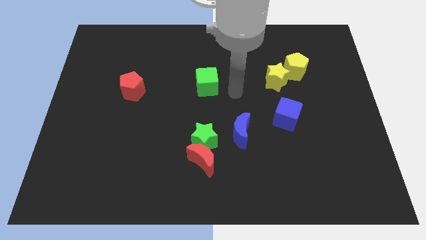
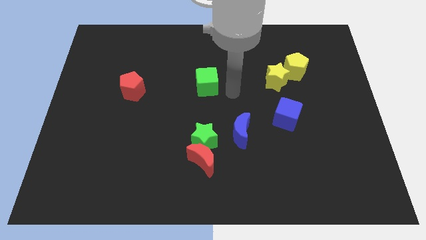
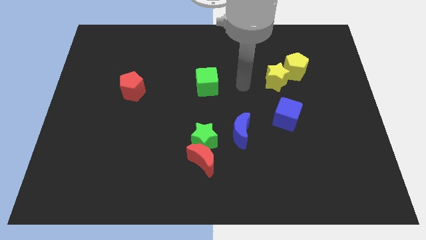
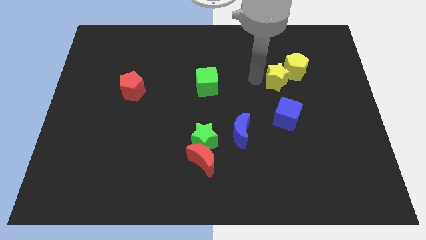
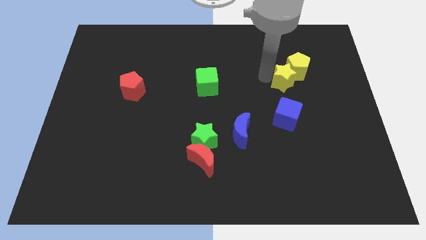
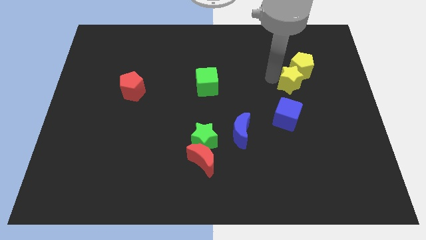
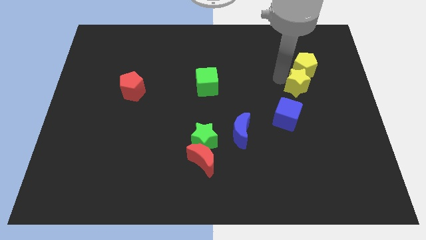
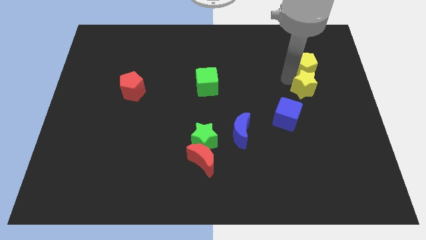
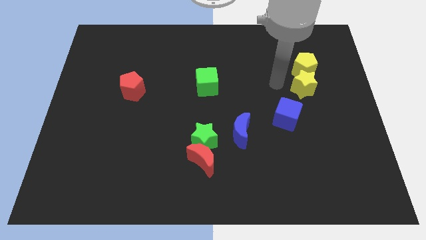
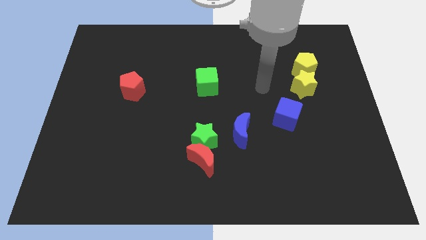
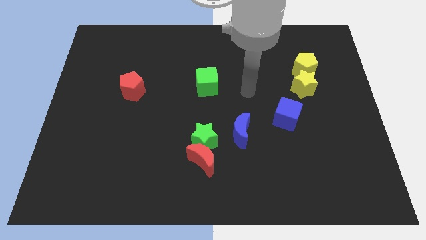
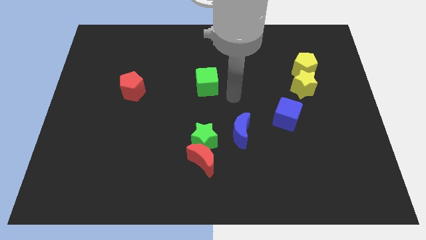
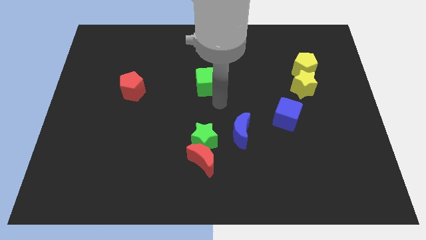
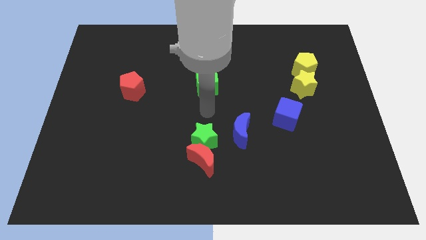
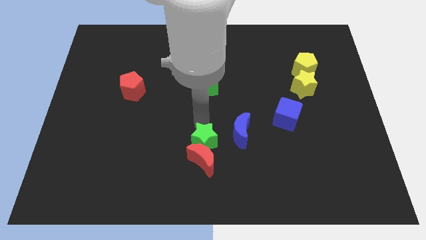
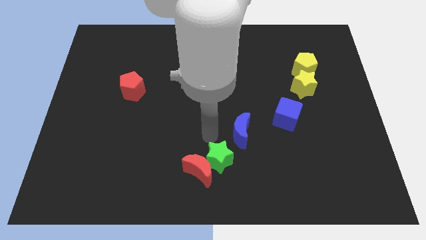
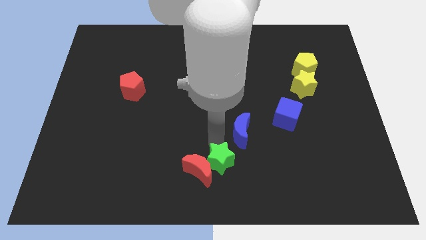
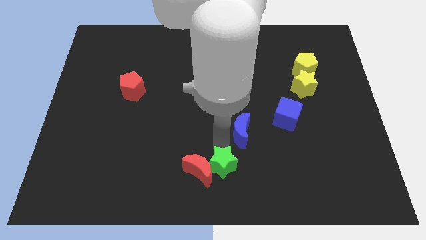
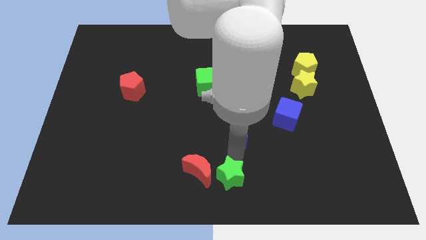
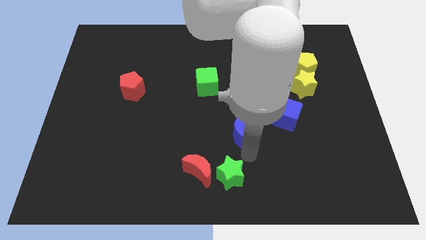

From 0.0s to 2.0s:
move the green star towards the bottom center of the board

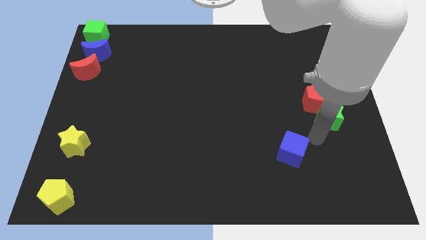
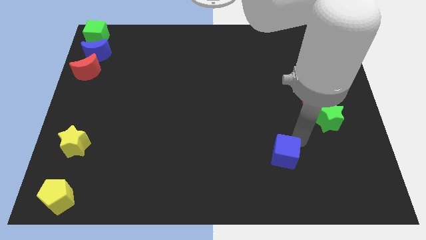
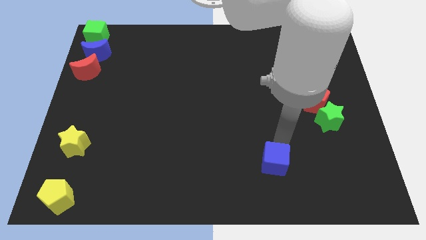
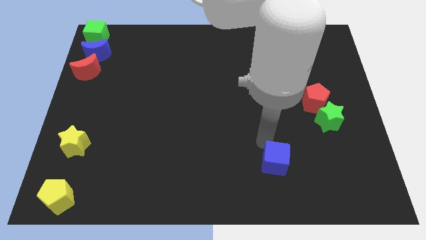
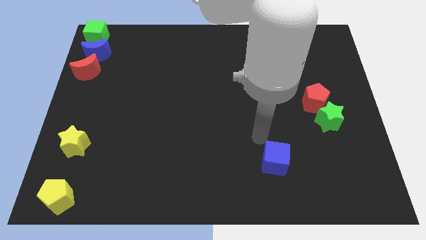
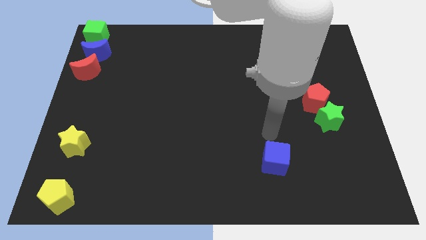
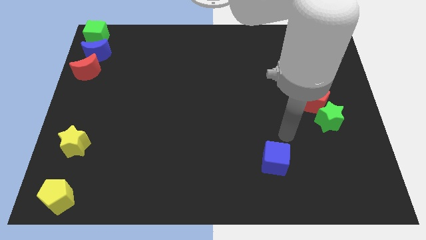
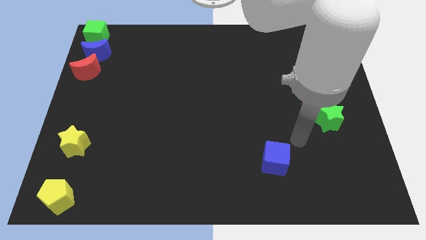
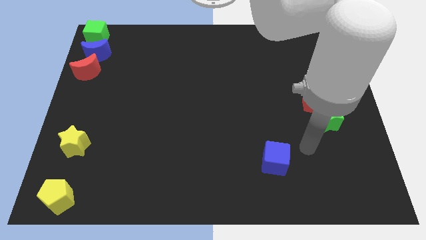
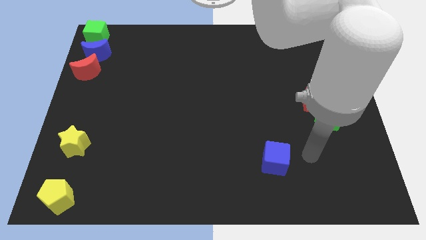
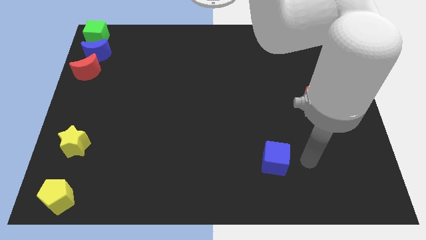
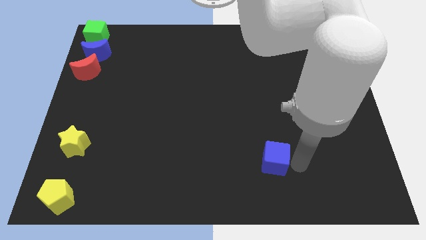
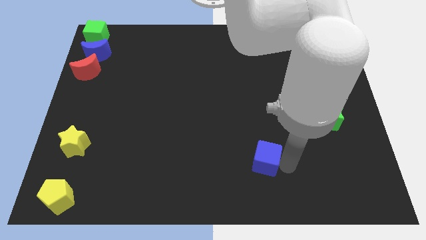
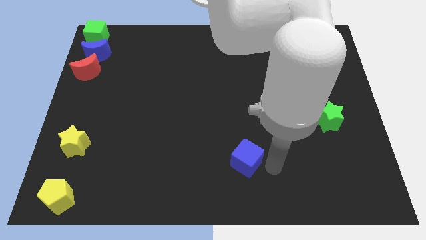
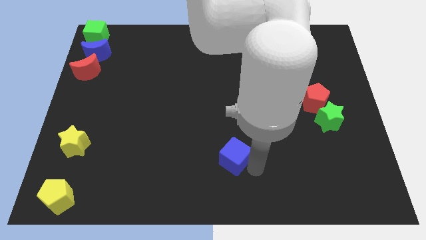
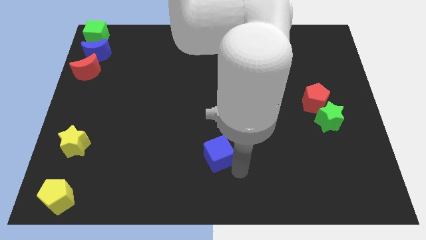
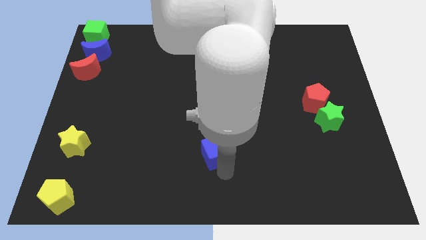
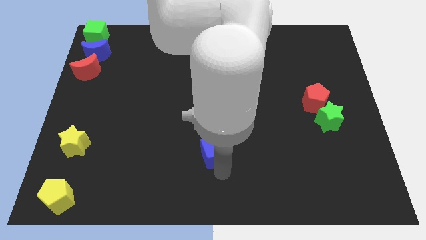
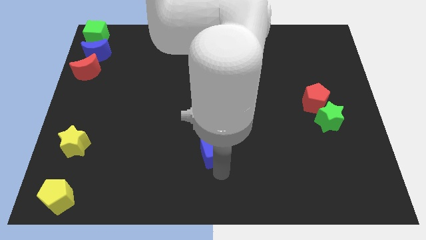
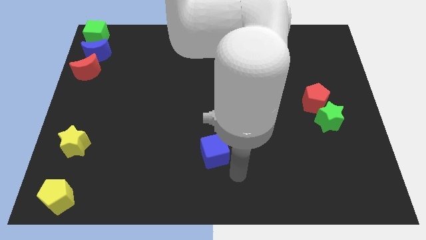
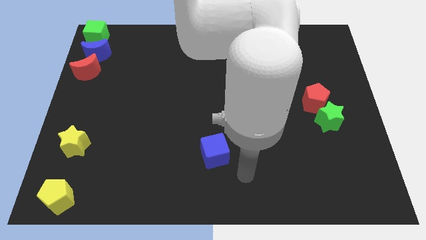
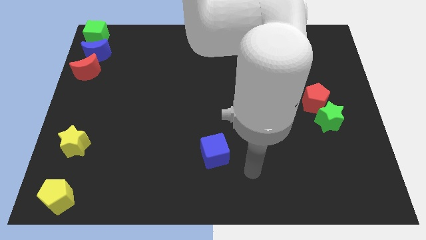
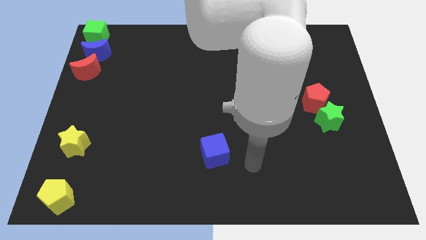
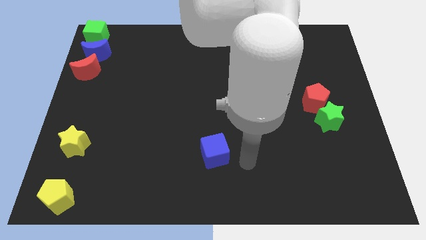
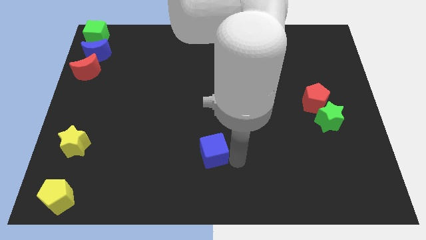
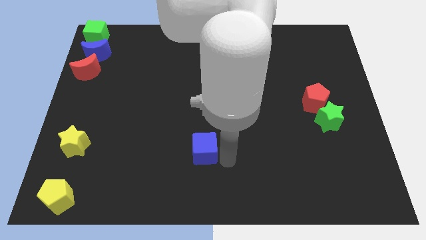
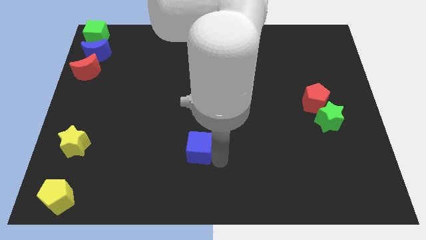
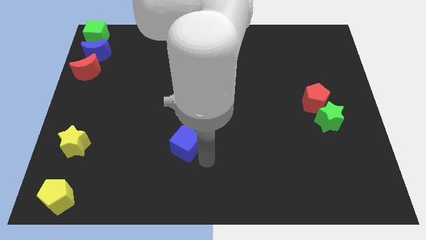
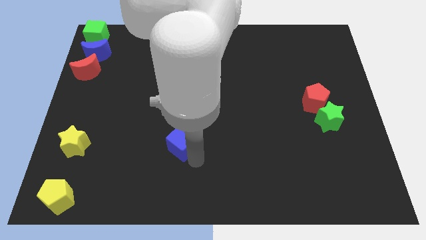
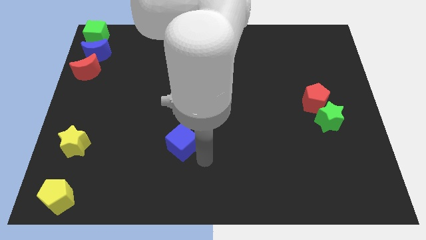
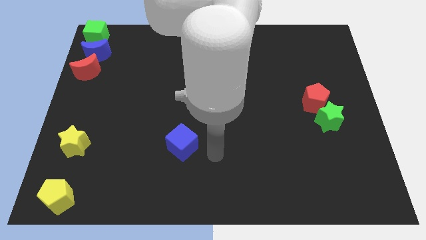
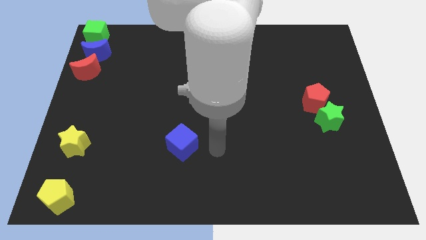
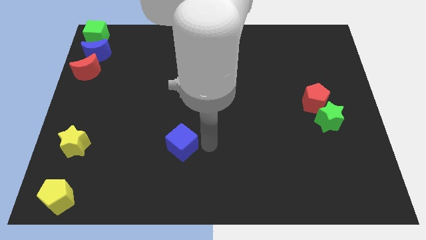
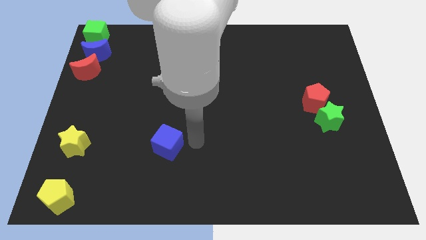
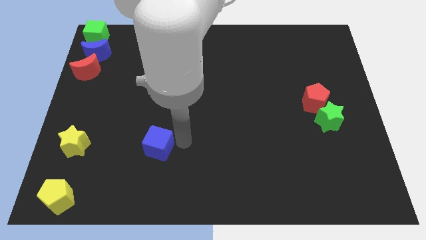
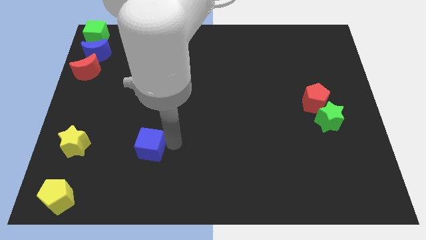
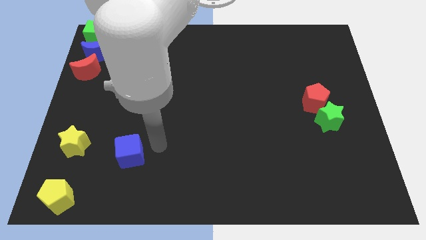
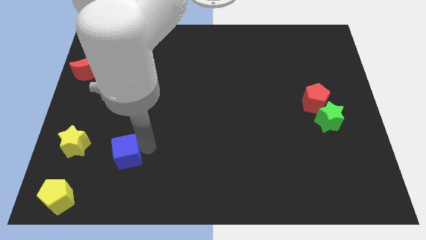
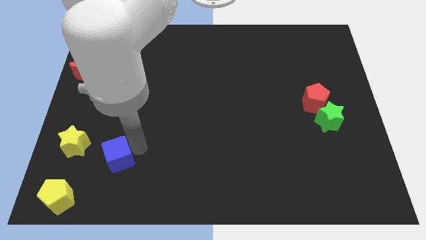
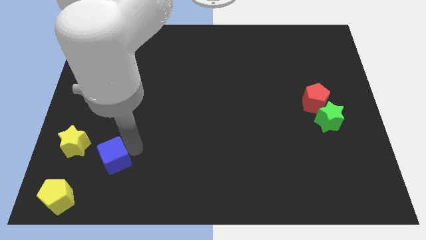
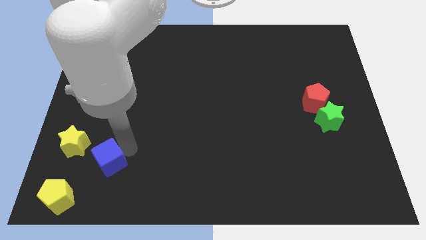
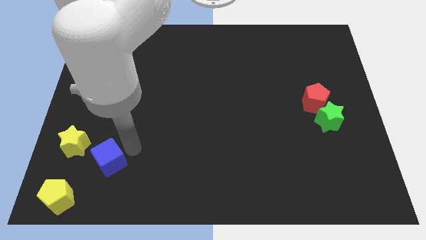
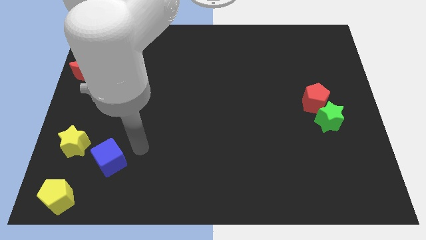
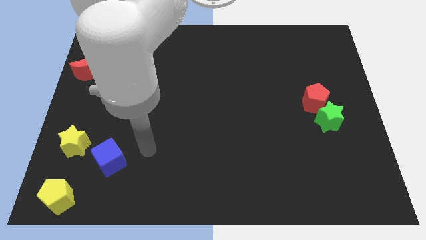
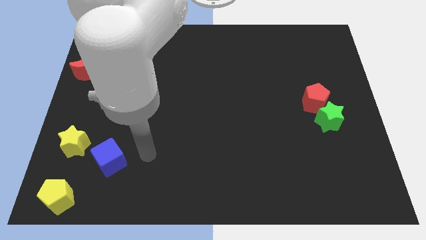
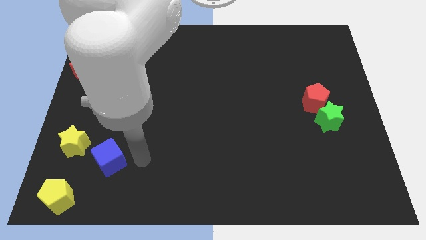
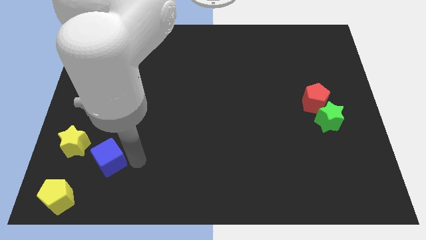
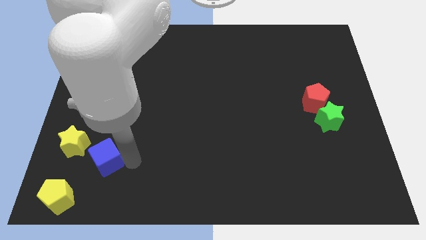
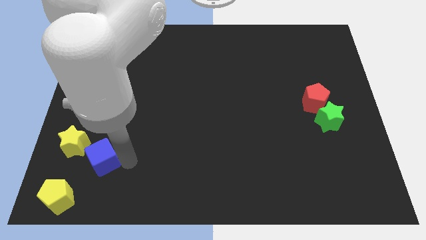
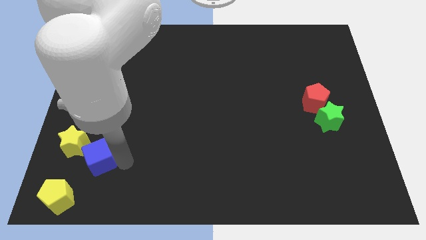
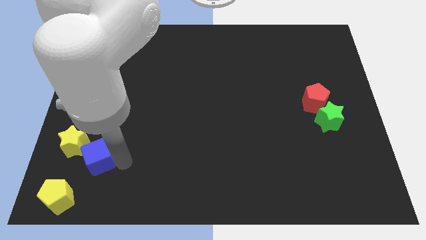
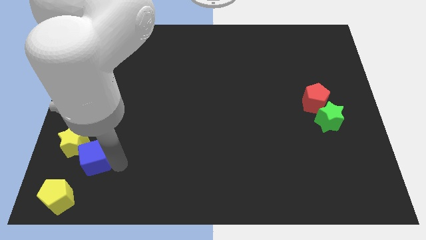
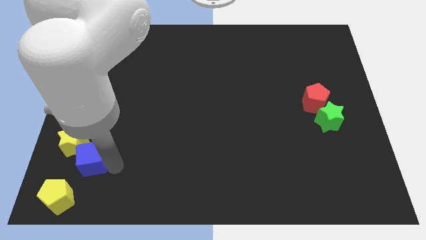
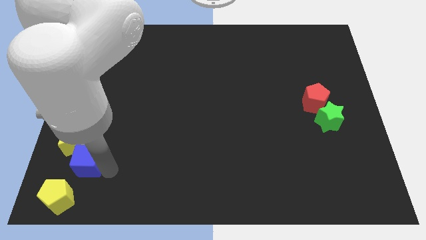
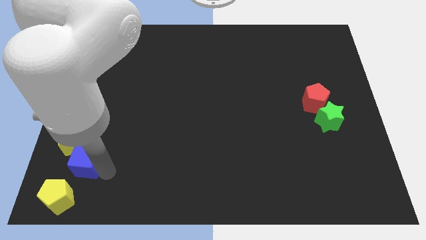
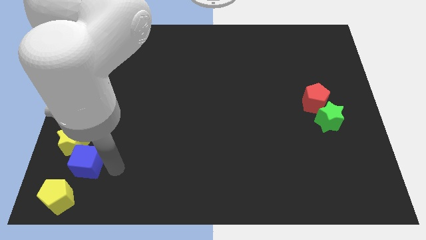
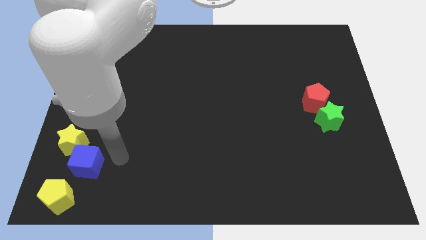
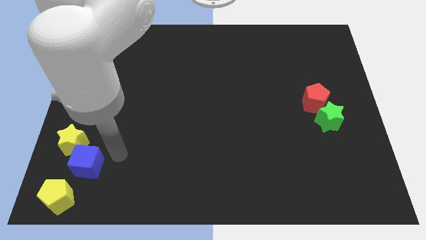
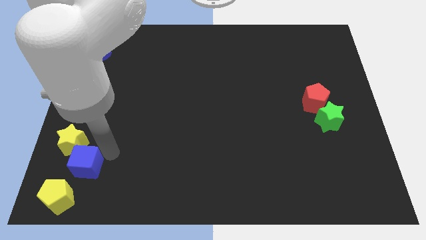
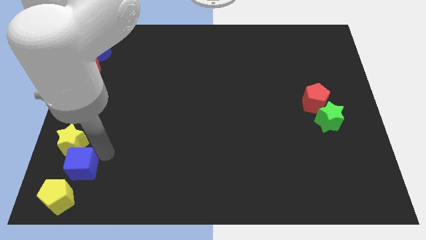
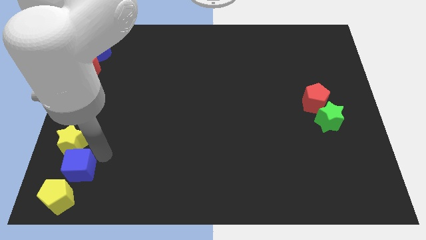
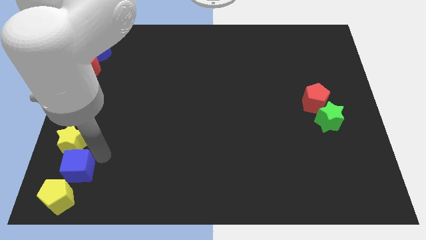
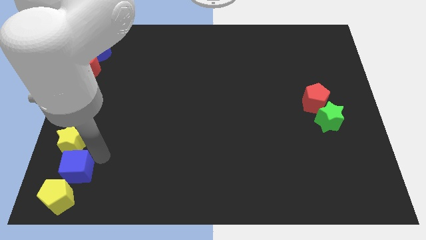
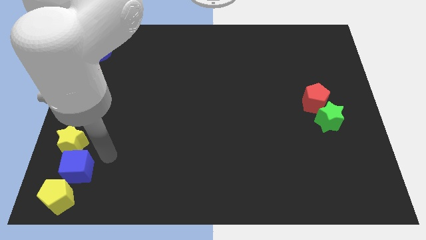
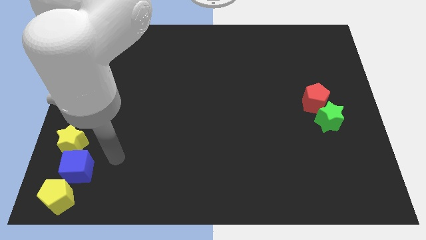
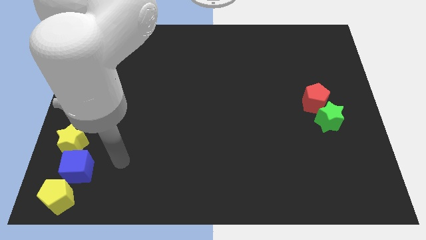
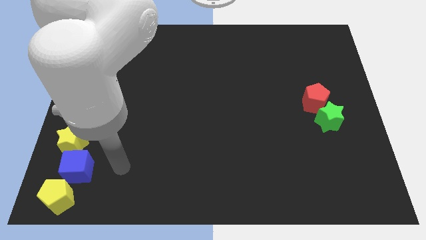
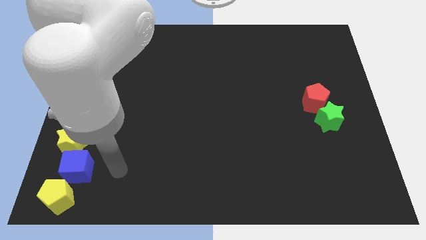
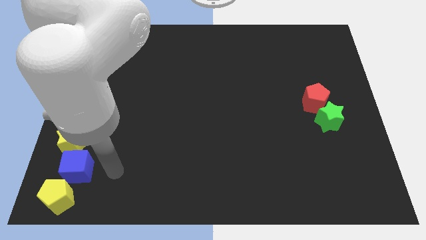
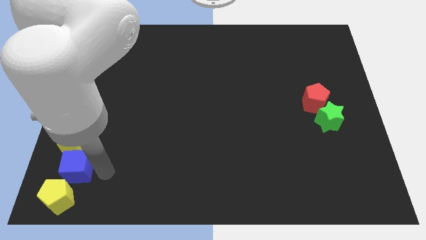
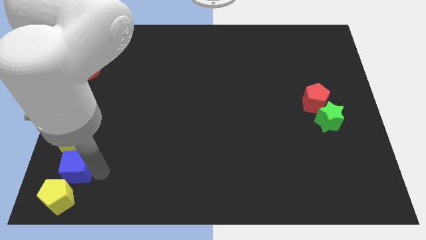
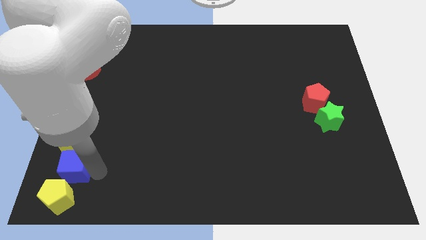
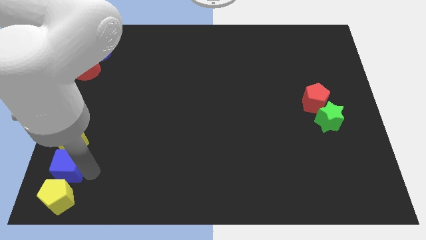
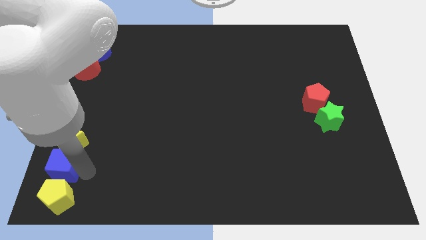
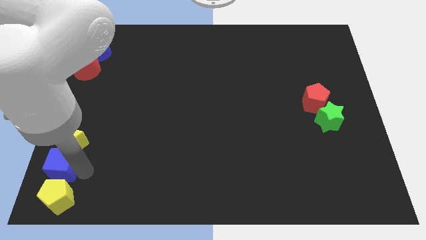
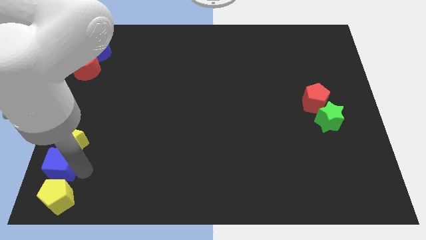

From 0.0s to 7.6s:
place the blue cube between two yellow blocks
